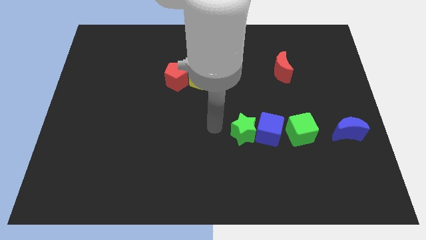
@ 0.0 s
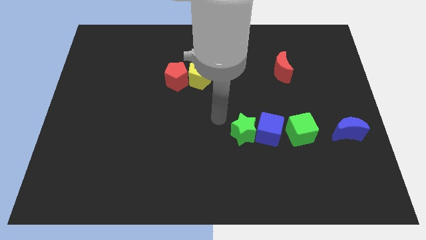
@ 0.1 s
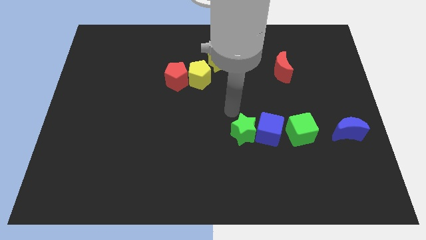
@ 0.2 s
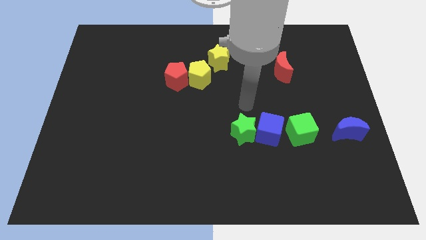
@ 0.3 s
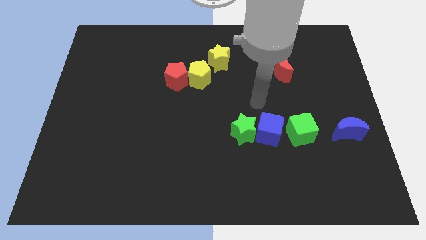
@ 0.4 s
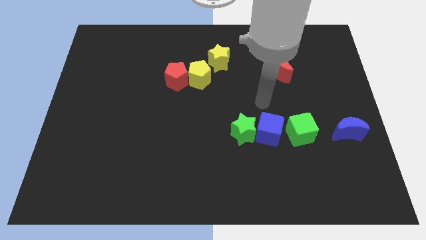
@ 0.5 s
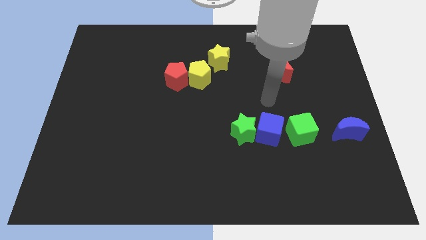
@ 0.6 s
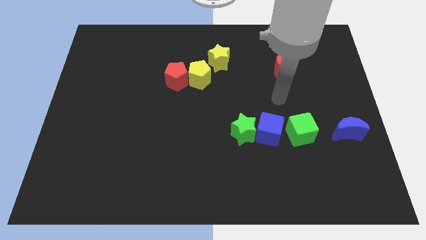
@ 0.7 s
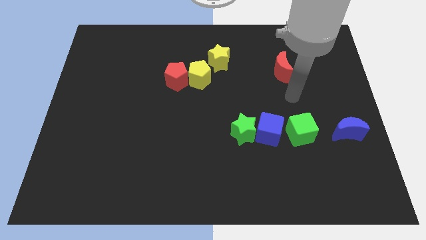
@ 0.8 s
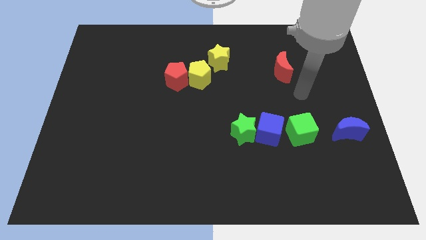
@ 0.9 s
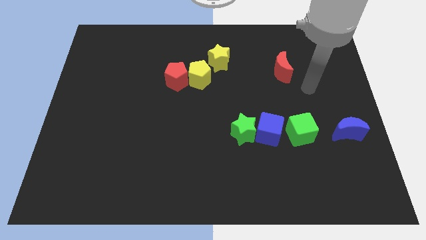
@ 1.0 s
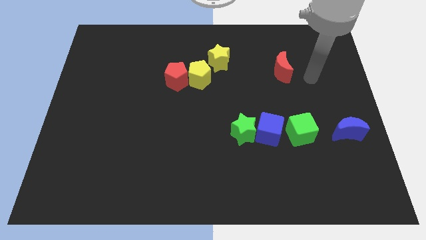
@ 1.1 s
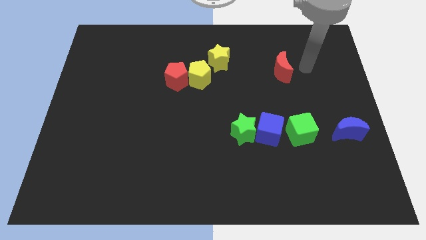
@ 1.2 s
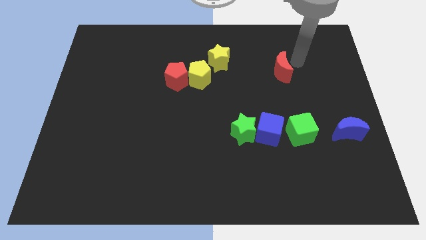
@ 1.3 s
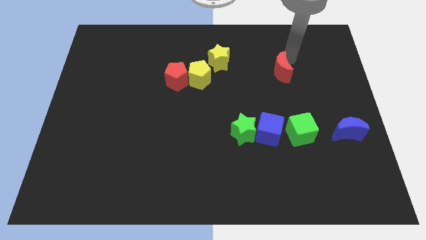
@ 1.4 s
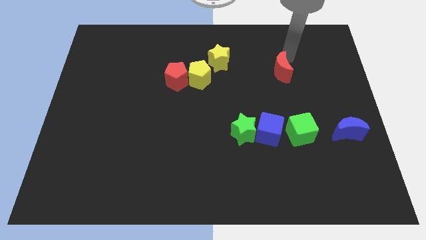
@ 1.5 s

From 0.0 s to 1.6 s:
move your arm towards the red crescent

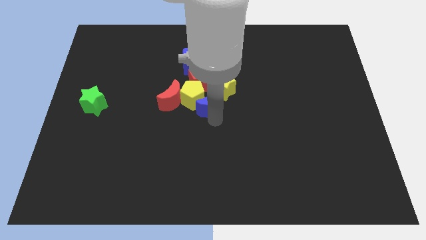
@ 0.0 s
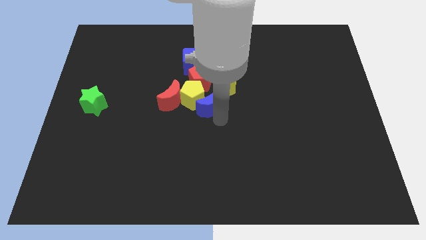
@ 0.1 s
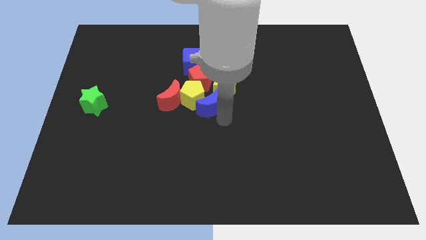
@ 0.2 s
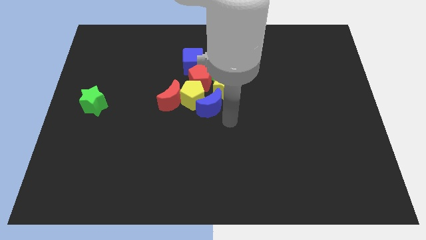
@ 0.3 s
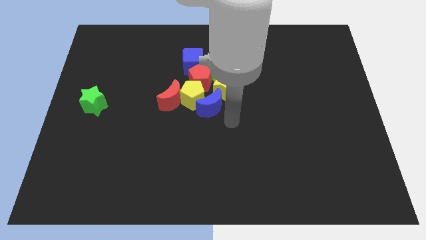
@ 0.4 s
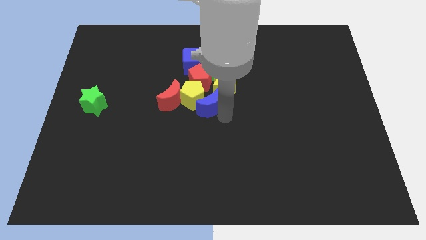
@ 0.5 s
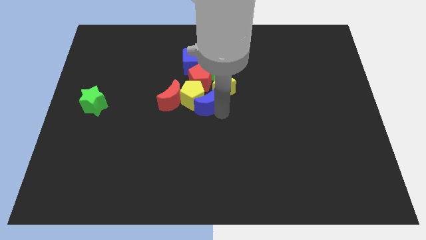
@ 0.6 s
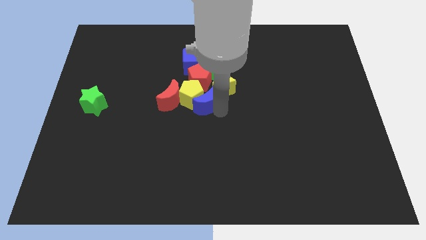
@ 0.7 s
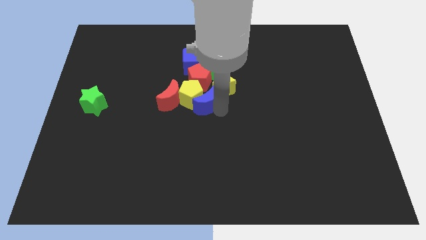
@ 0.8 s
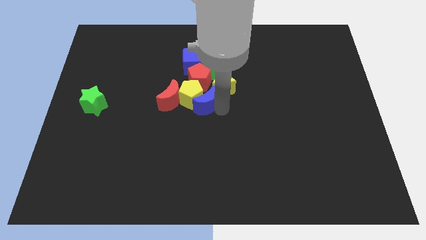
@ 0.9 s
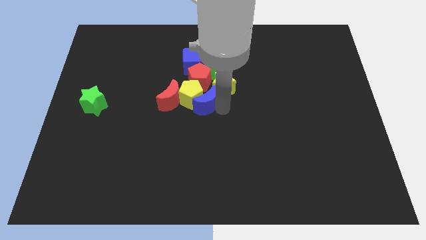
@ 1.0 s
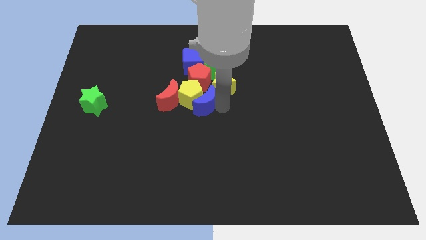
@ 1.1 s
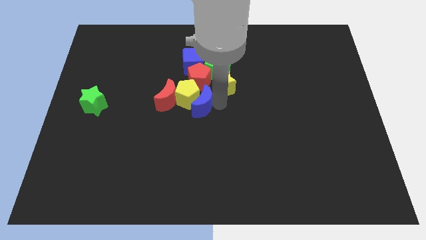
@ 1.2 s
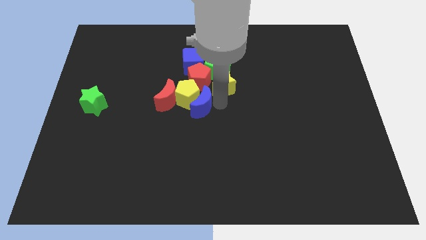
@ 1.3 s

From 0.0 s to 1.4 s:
push the red crescent and the yellow pentagon with the blue crescent towards the left center of the board

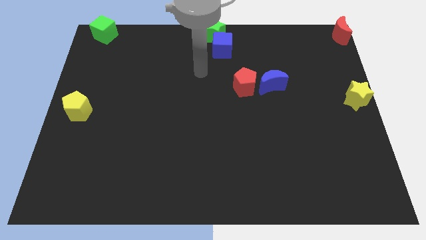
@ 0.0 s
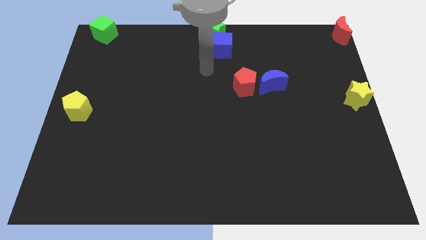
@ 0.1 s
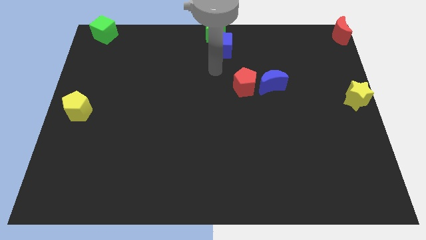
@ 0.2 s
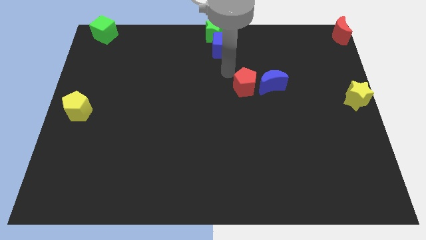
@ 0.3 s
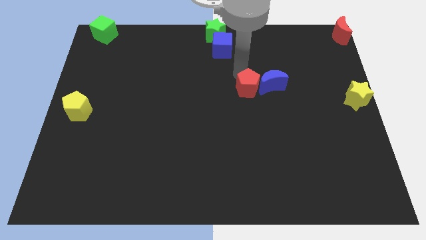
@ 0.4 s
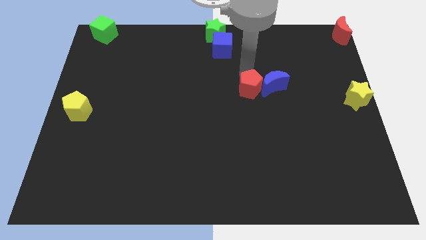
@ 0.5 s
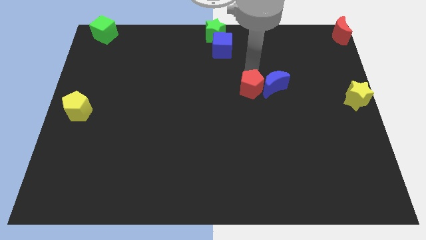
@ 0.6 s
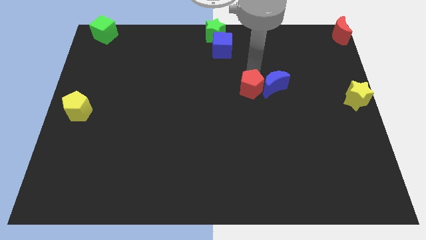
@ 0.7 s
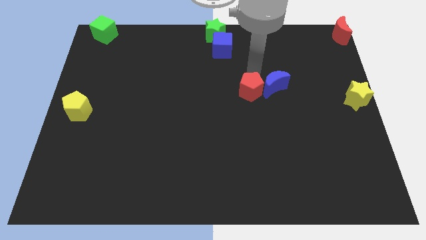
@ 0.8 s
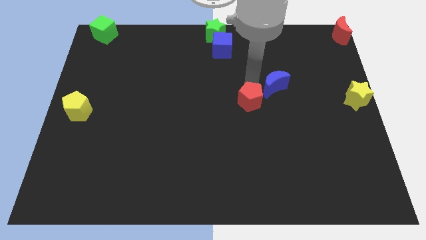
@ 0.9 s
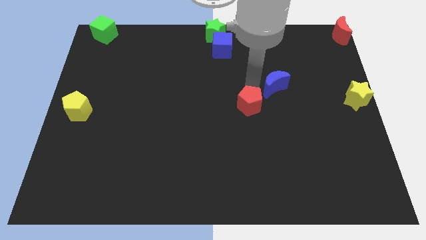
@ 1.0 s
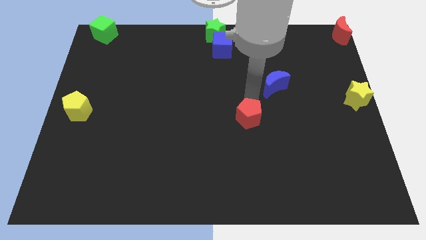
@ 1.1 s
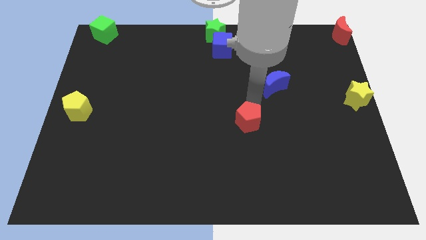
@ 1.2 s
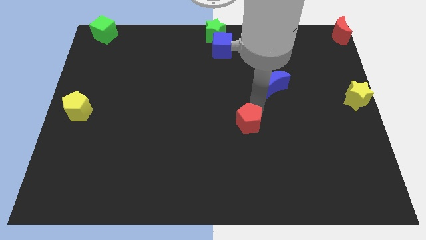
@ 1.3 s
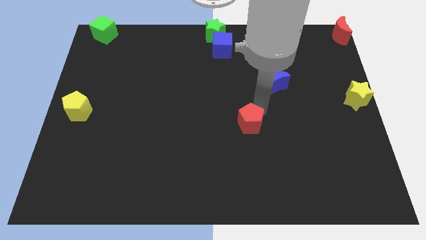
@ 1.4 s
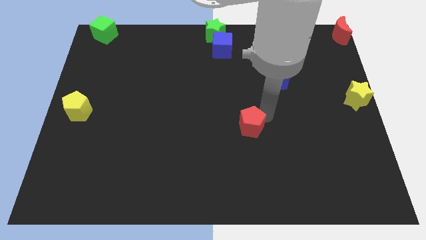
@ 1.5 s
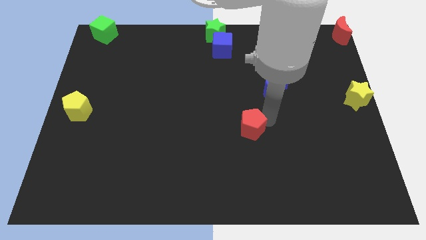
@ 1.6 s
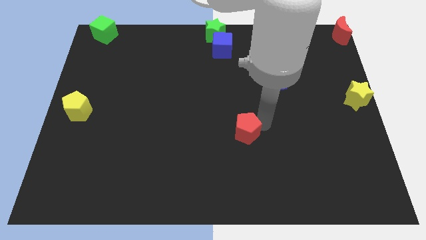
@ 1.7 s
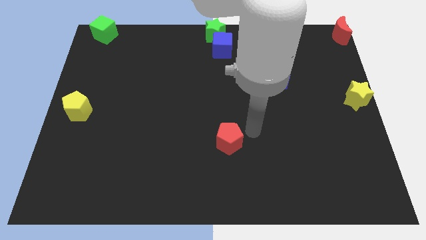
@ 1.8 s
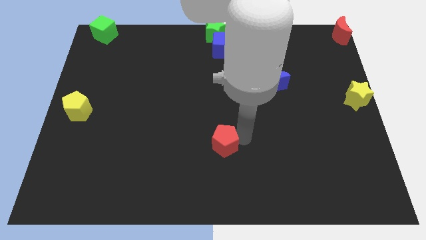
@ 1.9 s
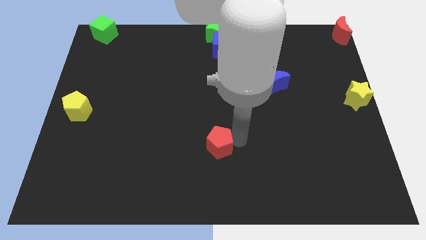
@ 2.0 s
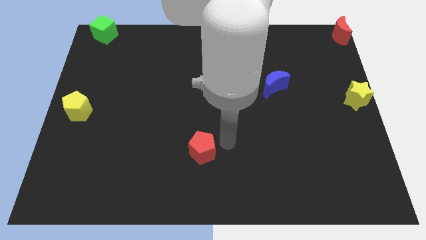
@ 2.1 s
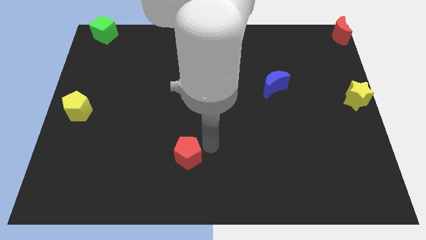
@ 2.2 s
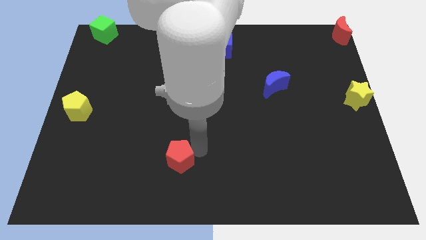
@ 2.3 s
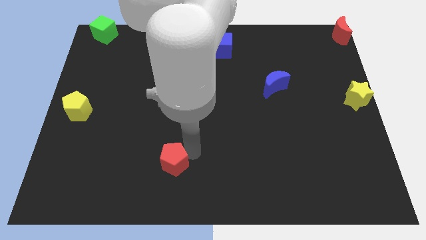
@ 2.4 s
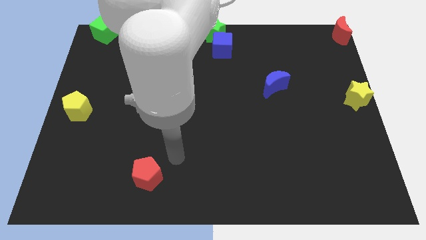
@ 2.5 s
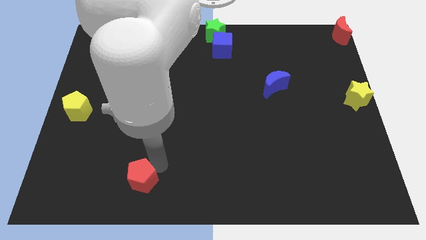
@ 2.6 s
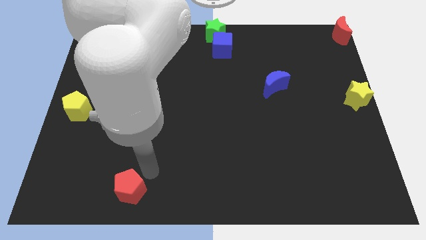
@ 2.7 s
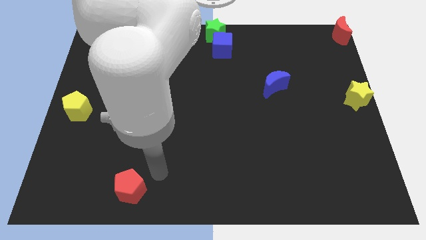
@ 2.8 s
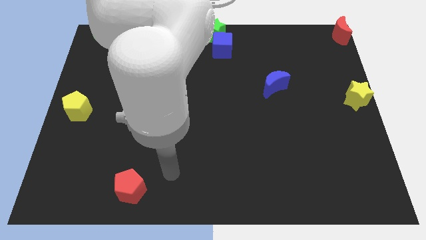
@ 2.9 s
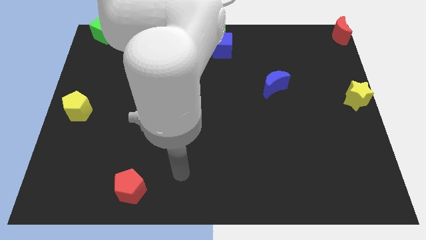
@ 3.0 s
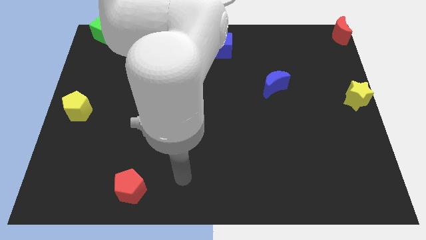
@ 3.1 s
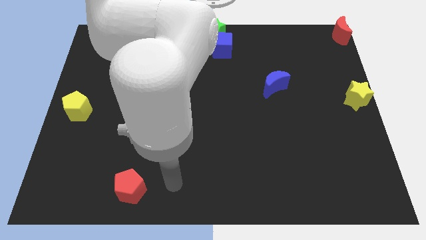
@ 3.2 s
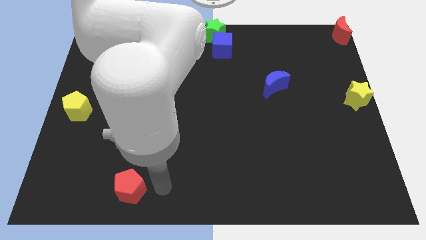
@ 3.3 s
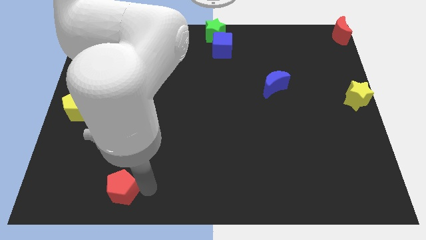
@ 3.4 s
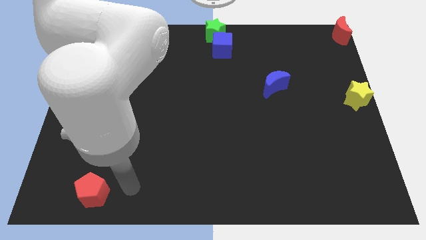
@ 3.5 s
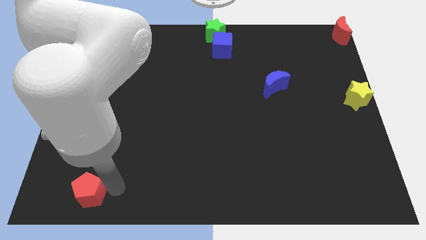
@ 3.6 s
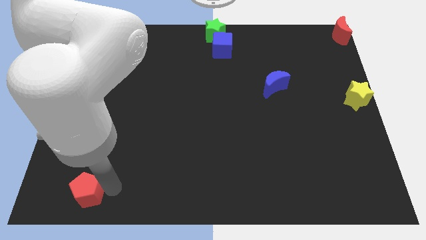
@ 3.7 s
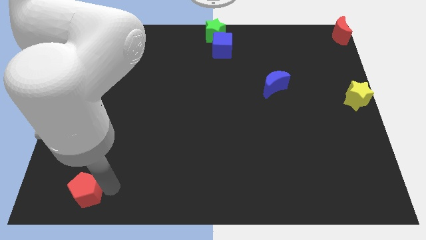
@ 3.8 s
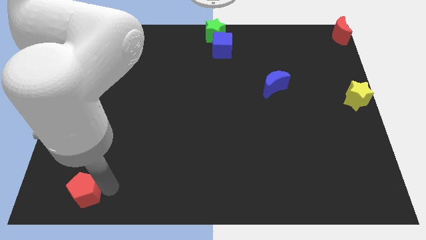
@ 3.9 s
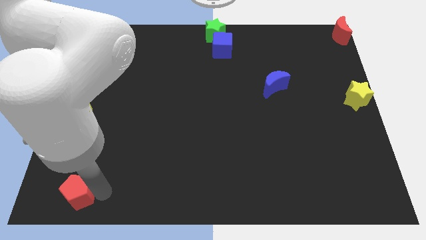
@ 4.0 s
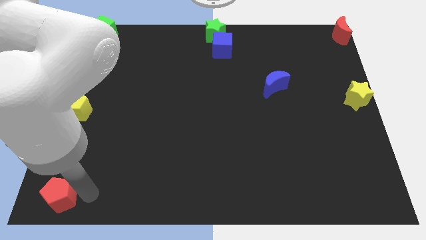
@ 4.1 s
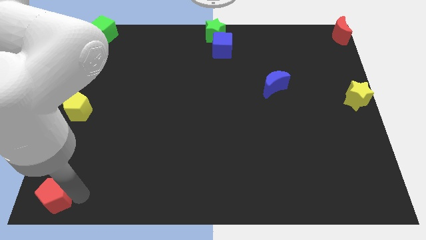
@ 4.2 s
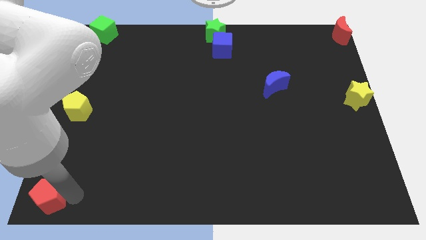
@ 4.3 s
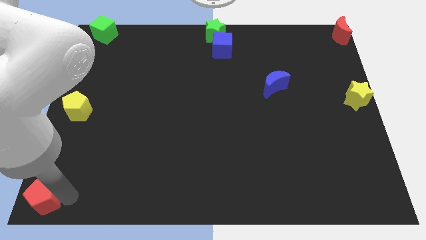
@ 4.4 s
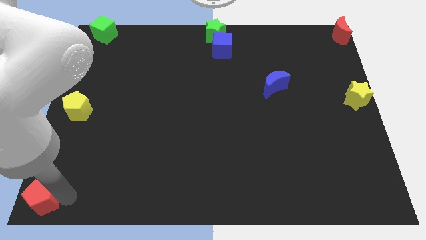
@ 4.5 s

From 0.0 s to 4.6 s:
move the red pentagon to the bottom left vertically to the yellow pentagon

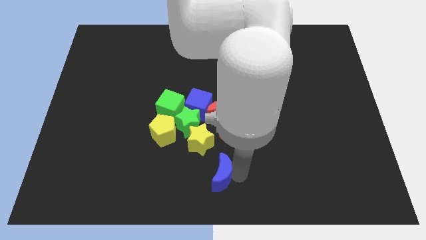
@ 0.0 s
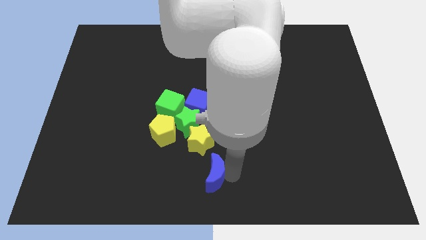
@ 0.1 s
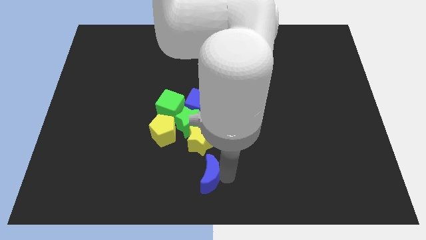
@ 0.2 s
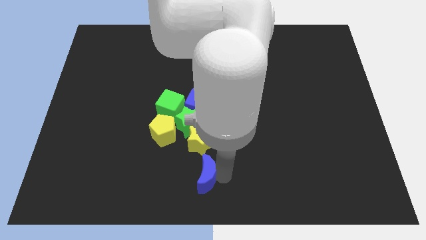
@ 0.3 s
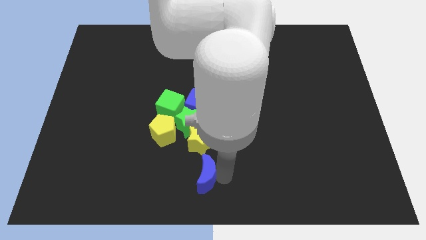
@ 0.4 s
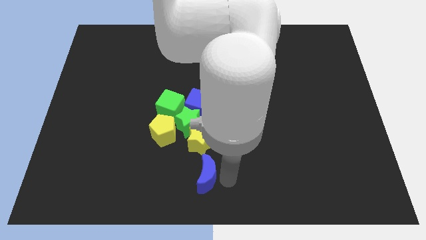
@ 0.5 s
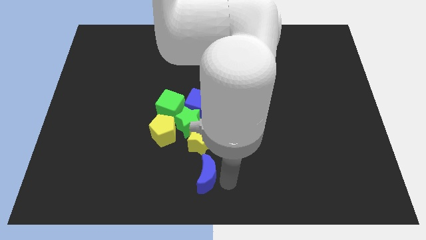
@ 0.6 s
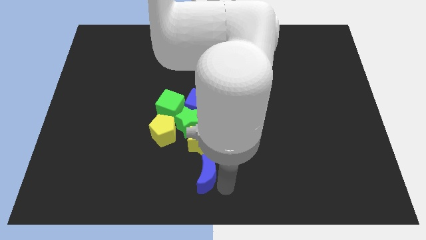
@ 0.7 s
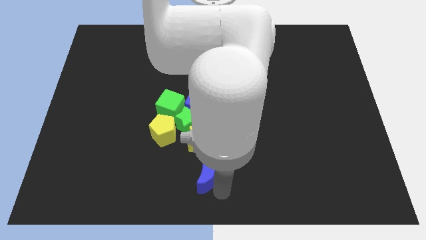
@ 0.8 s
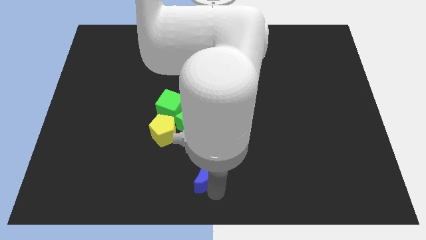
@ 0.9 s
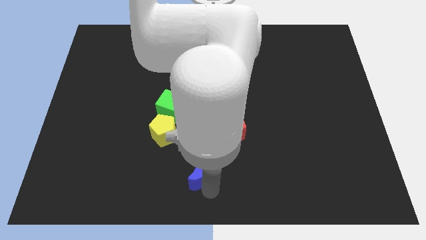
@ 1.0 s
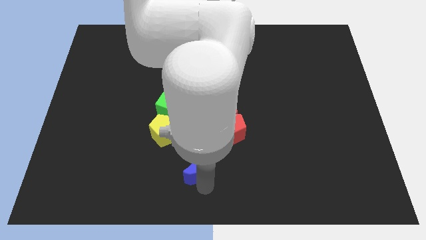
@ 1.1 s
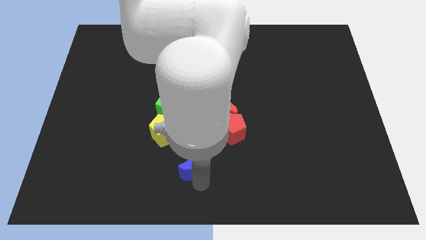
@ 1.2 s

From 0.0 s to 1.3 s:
move the blue crescent below the yellow star

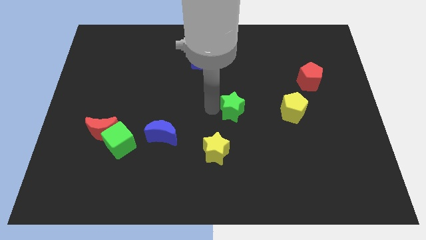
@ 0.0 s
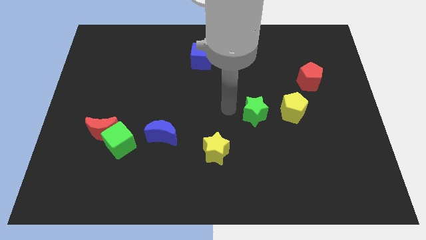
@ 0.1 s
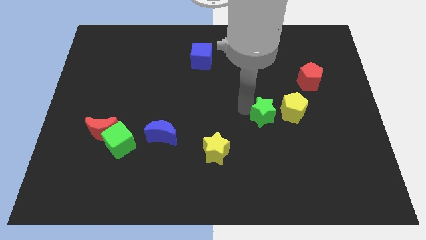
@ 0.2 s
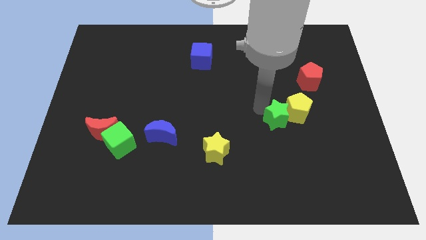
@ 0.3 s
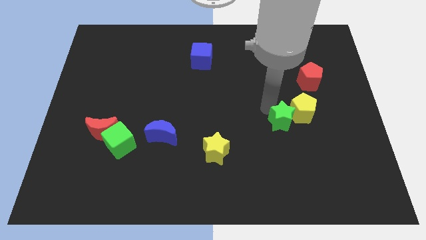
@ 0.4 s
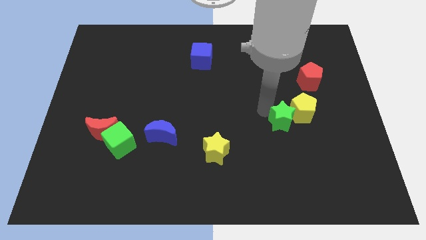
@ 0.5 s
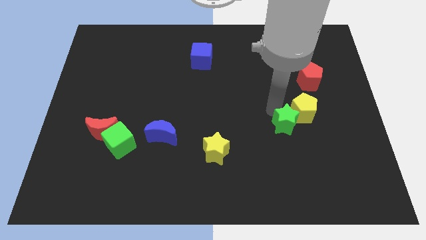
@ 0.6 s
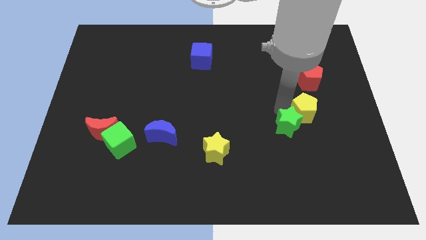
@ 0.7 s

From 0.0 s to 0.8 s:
push the green star into the yellow pentagon
